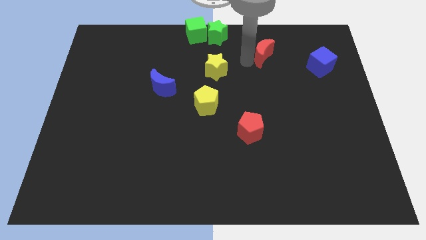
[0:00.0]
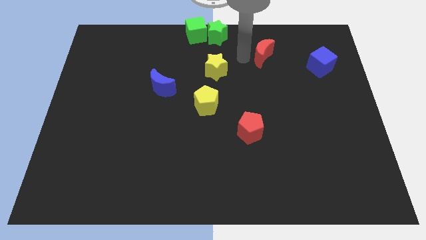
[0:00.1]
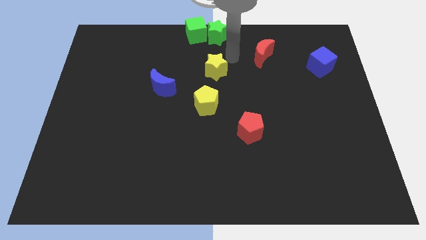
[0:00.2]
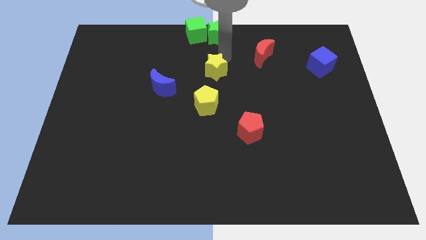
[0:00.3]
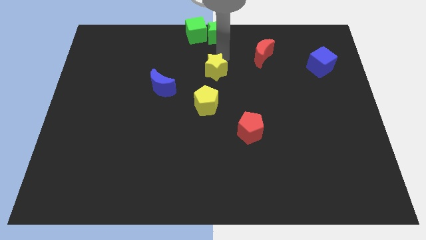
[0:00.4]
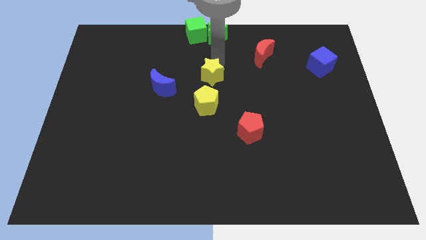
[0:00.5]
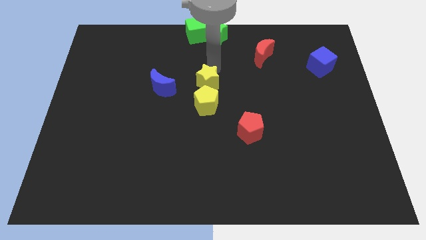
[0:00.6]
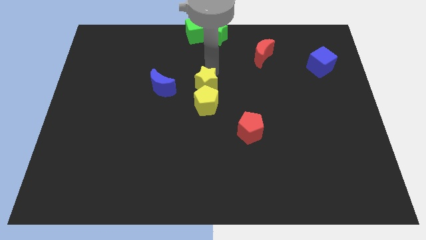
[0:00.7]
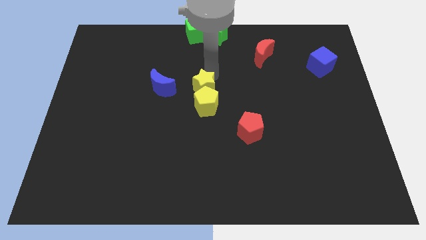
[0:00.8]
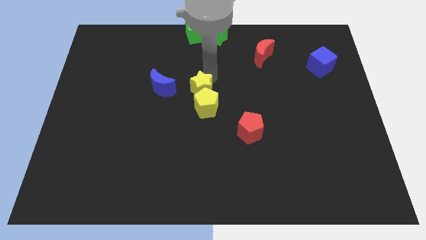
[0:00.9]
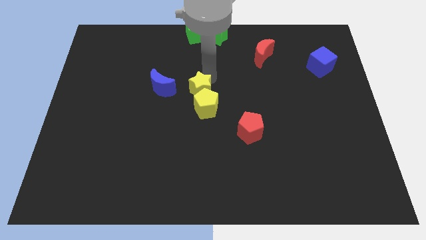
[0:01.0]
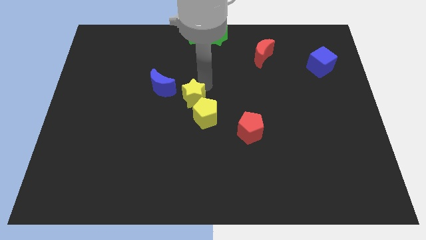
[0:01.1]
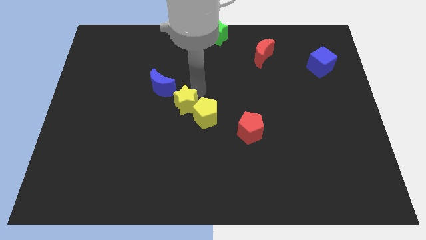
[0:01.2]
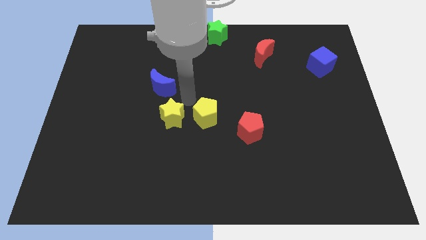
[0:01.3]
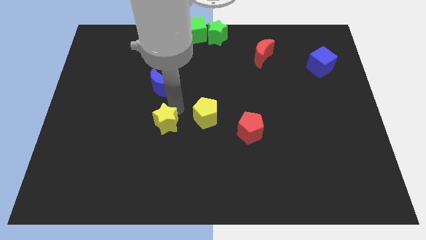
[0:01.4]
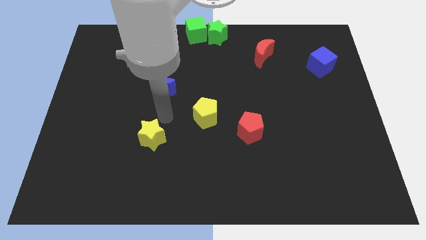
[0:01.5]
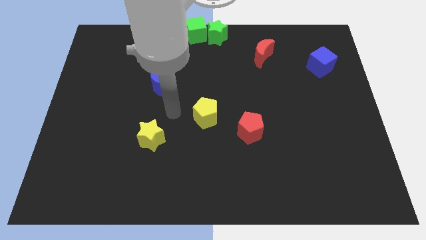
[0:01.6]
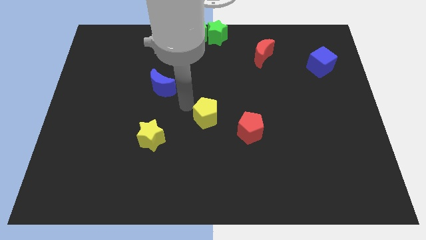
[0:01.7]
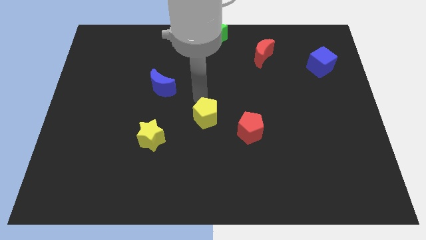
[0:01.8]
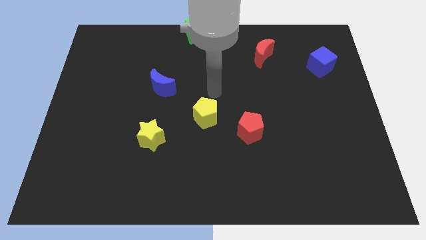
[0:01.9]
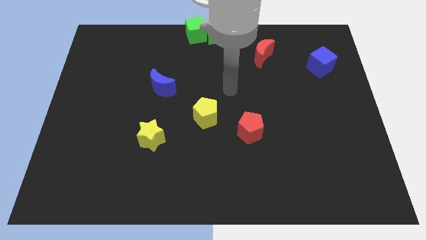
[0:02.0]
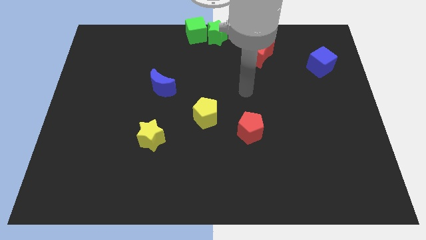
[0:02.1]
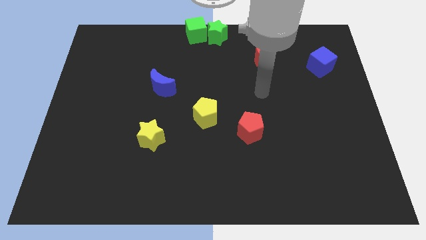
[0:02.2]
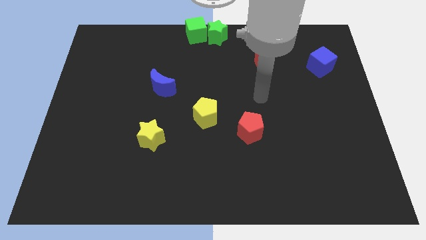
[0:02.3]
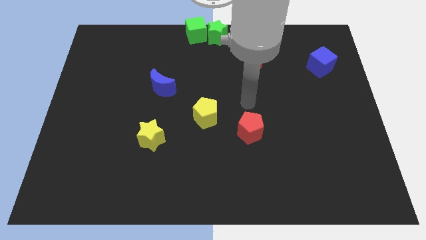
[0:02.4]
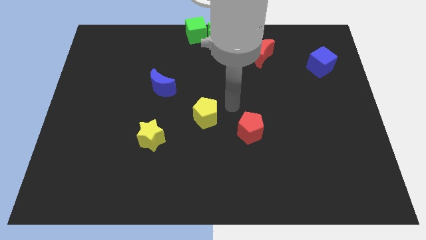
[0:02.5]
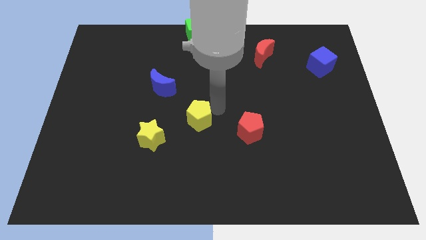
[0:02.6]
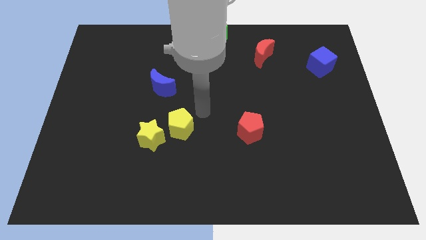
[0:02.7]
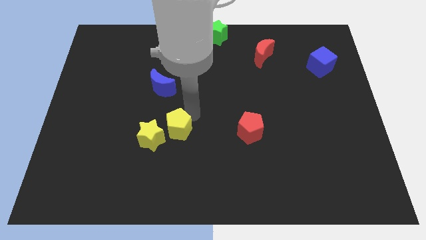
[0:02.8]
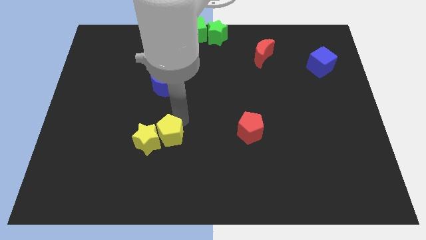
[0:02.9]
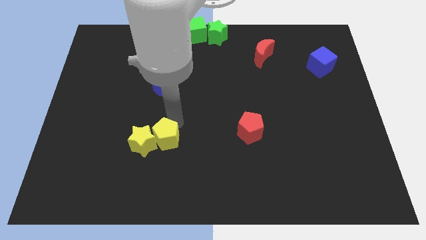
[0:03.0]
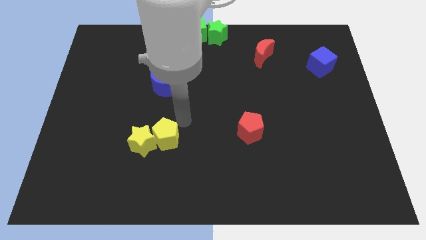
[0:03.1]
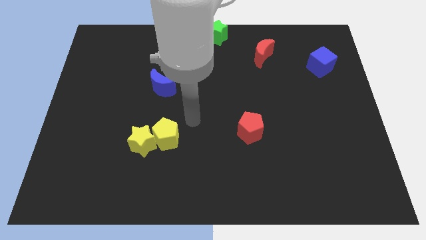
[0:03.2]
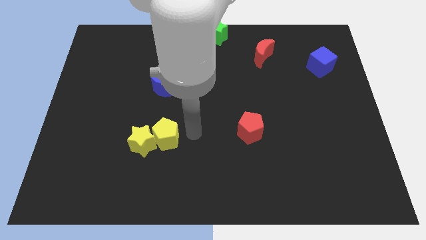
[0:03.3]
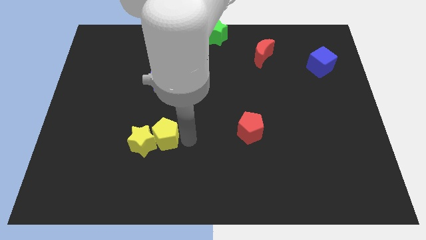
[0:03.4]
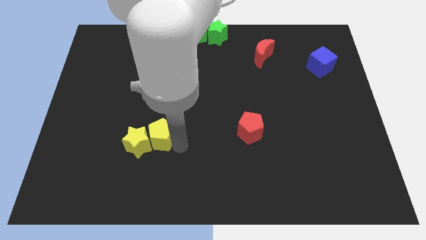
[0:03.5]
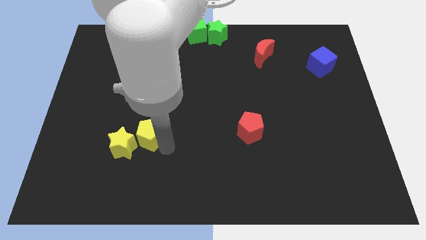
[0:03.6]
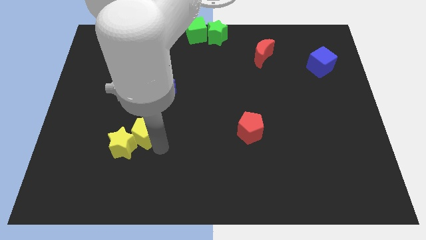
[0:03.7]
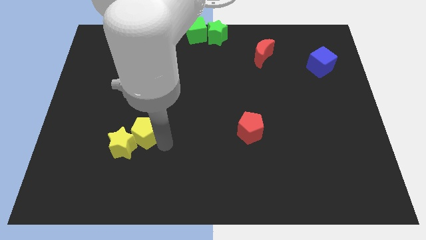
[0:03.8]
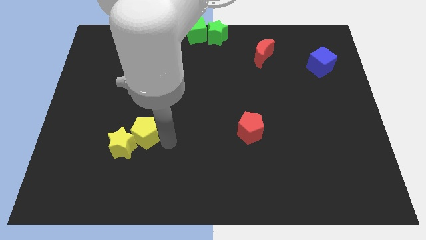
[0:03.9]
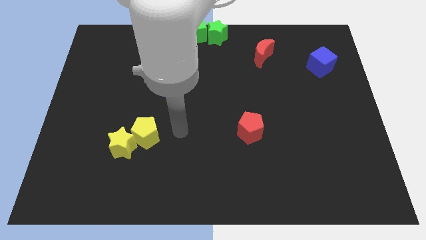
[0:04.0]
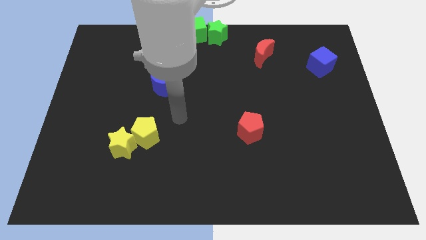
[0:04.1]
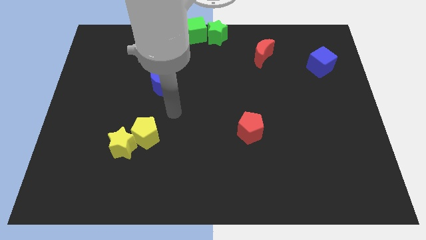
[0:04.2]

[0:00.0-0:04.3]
push the yellow pentagon into the yellow star

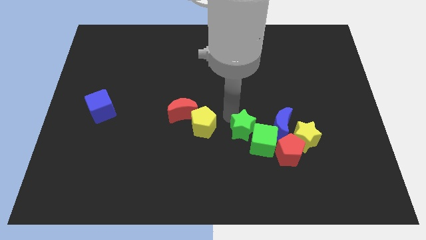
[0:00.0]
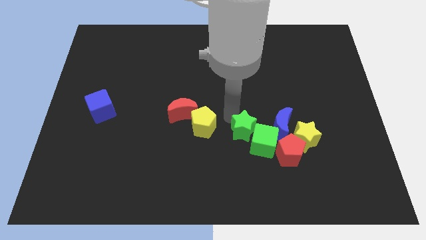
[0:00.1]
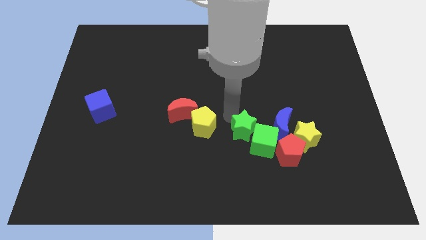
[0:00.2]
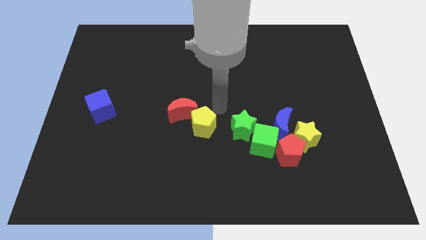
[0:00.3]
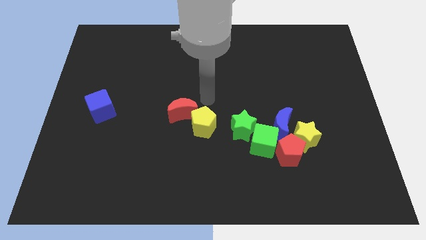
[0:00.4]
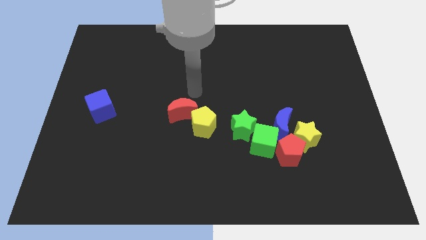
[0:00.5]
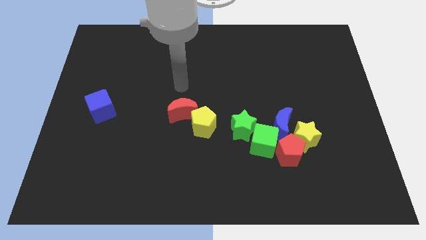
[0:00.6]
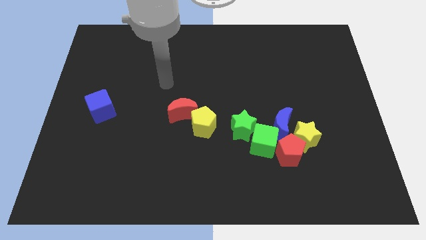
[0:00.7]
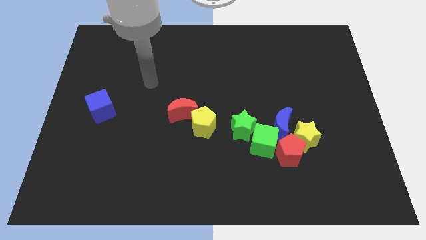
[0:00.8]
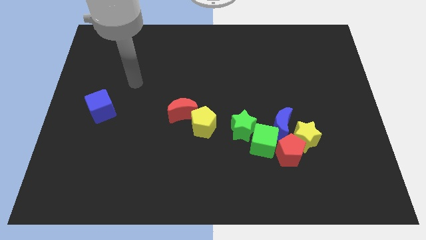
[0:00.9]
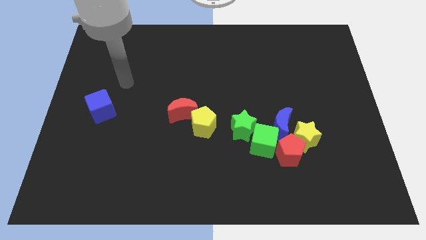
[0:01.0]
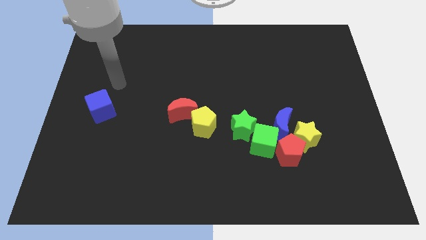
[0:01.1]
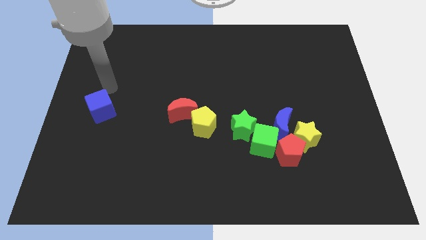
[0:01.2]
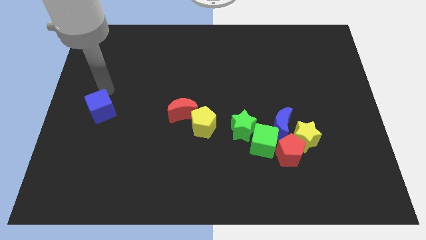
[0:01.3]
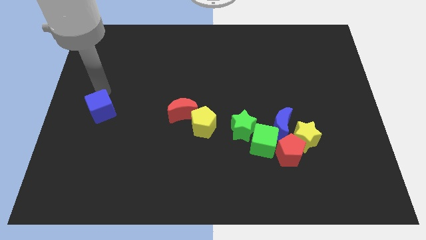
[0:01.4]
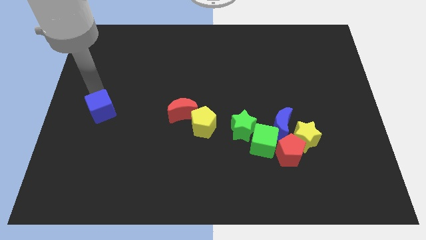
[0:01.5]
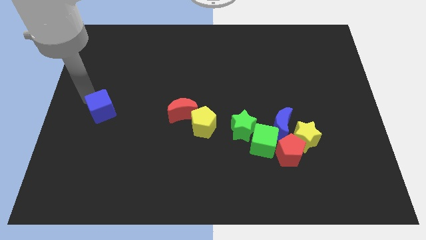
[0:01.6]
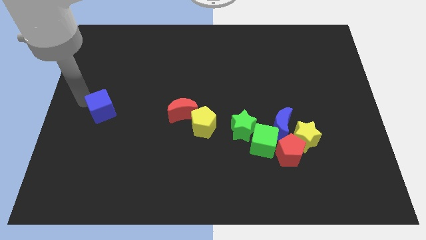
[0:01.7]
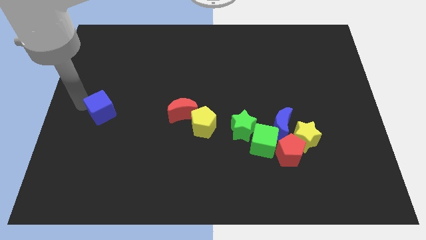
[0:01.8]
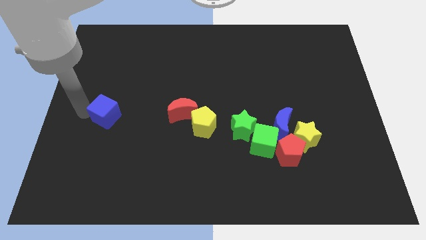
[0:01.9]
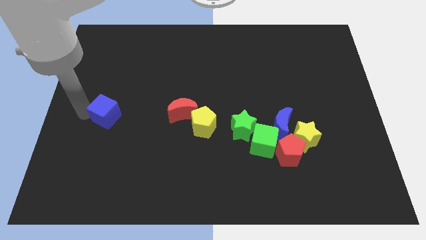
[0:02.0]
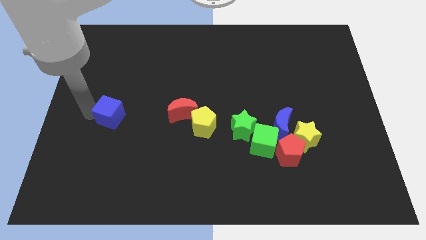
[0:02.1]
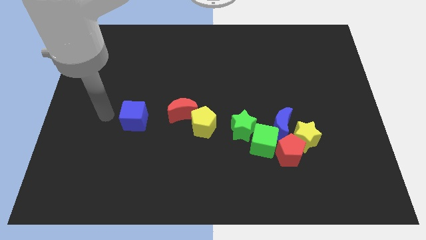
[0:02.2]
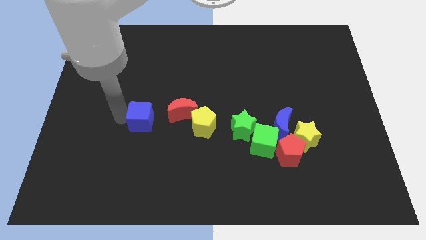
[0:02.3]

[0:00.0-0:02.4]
push the blue cube into red moon and yellow pentagon

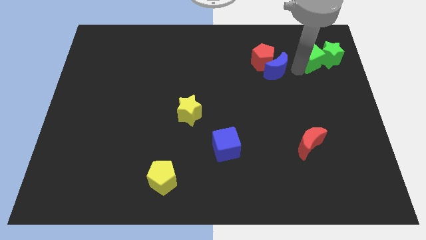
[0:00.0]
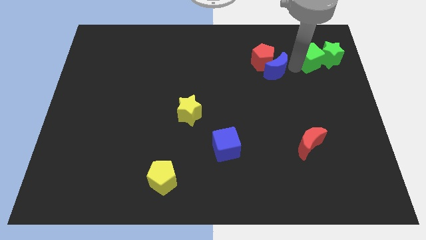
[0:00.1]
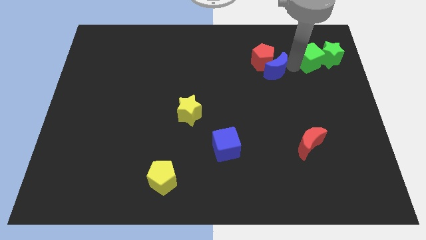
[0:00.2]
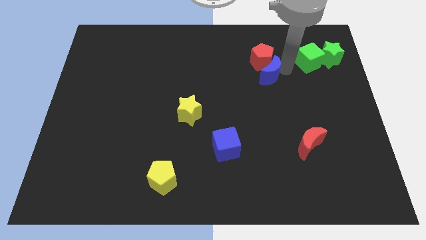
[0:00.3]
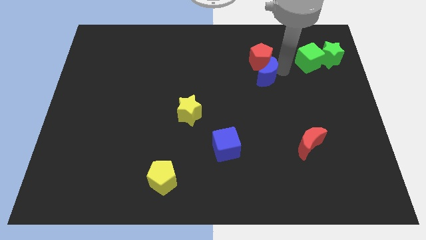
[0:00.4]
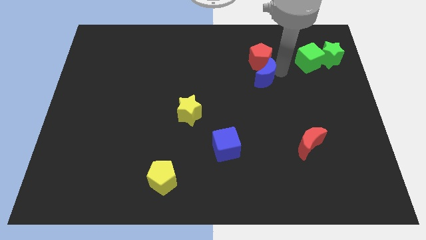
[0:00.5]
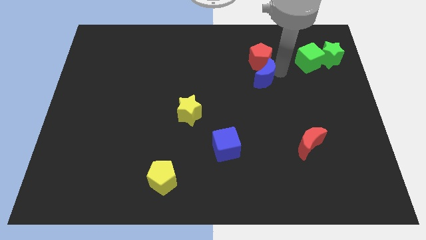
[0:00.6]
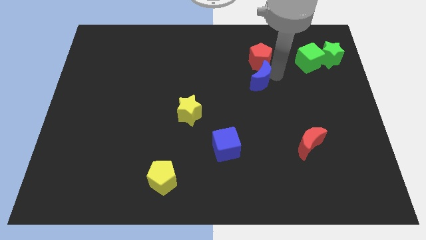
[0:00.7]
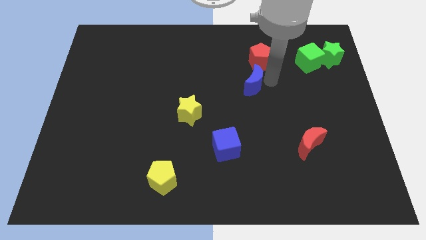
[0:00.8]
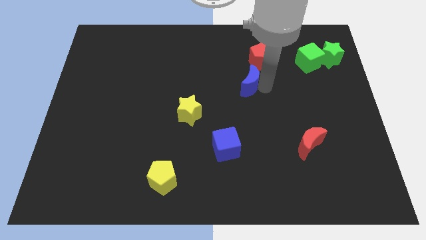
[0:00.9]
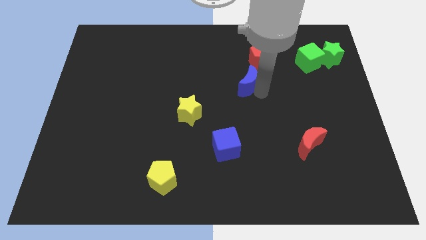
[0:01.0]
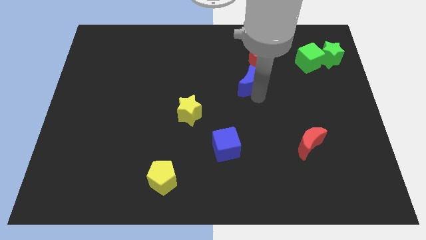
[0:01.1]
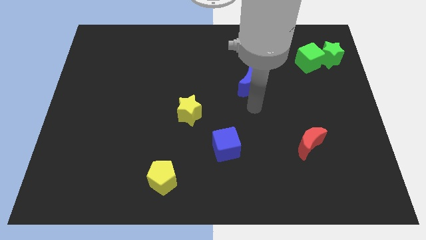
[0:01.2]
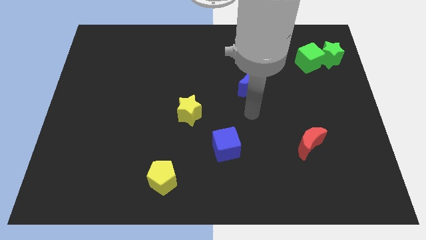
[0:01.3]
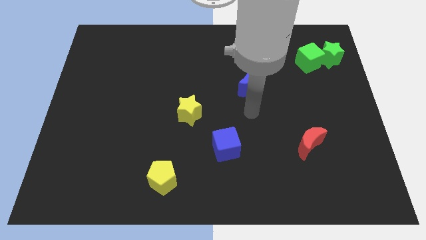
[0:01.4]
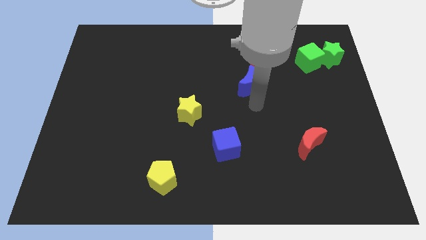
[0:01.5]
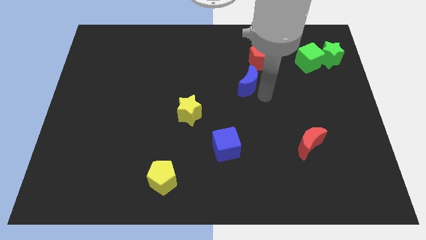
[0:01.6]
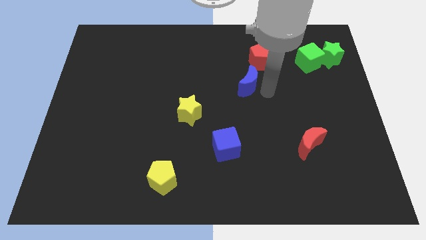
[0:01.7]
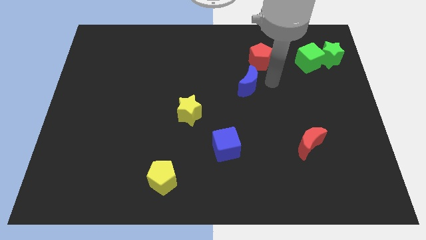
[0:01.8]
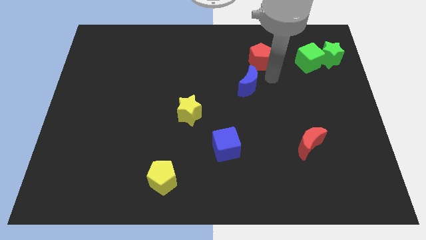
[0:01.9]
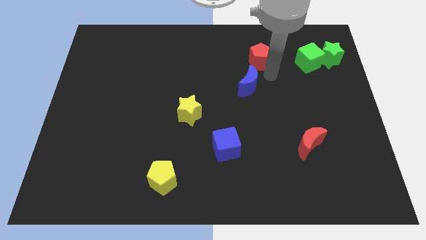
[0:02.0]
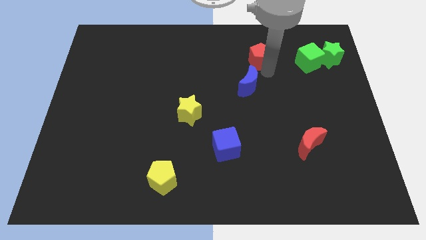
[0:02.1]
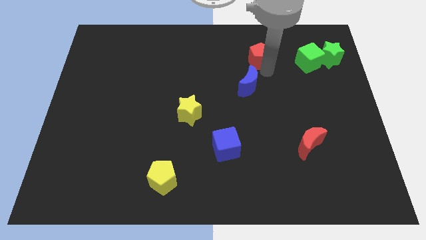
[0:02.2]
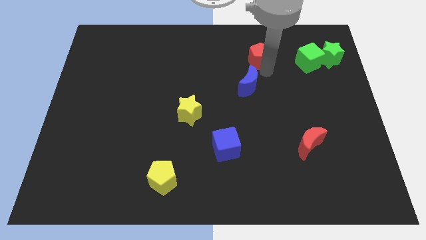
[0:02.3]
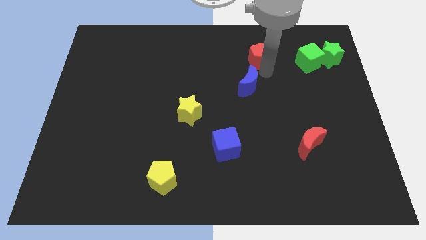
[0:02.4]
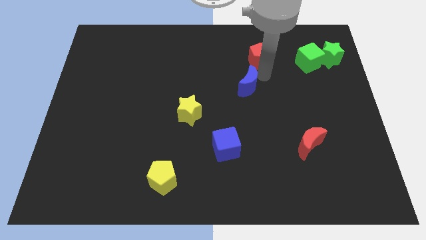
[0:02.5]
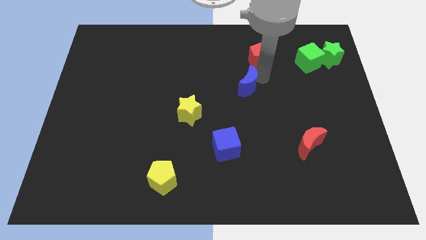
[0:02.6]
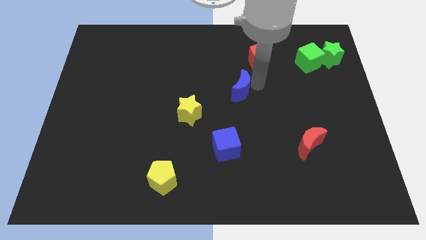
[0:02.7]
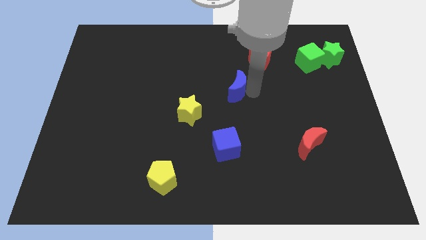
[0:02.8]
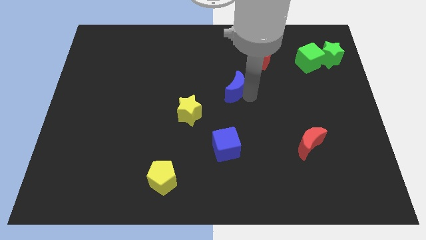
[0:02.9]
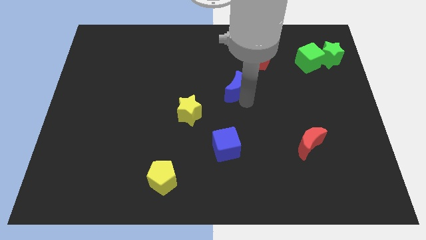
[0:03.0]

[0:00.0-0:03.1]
separate blue crescent from the red pentagon
